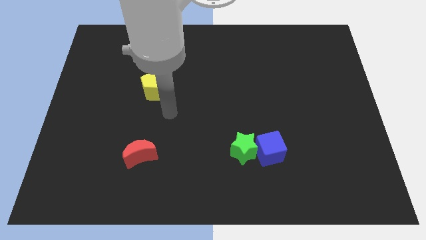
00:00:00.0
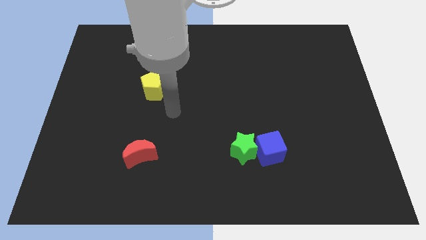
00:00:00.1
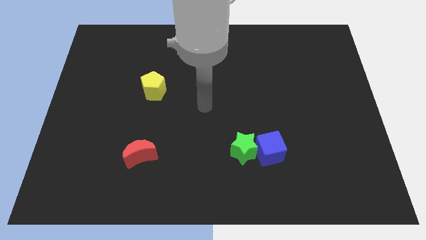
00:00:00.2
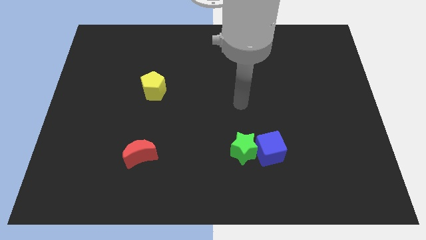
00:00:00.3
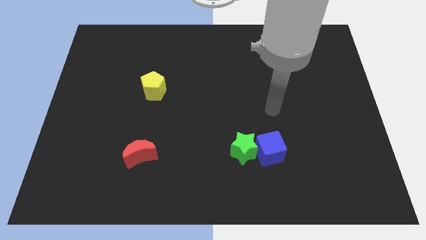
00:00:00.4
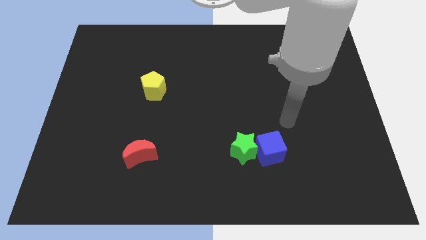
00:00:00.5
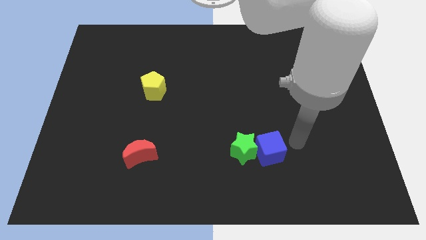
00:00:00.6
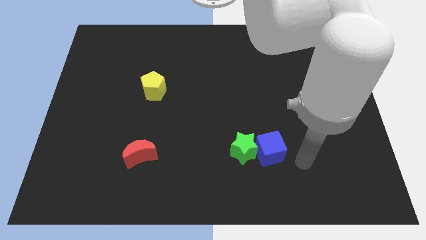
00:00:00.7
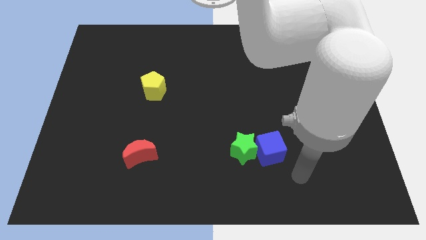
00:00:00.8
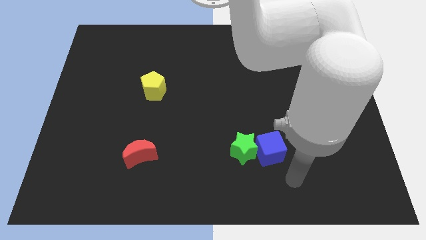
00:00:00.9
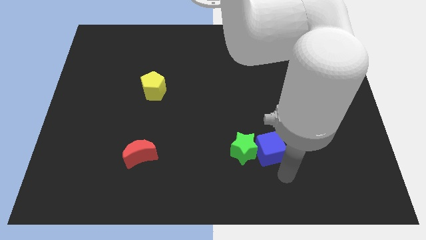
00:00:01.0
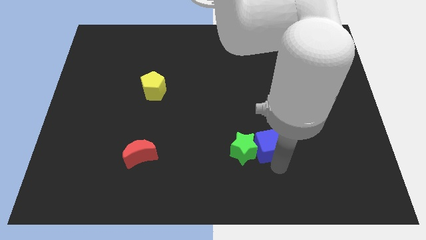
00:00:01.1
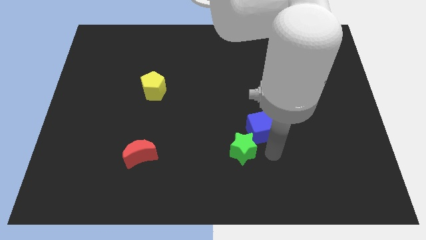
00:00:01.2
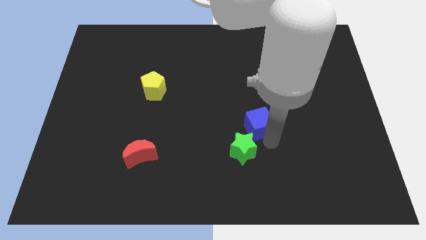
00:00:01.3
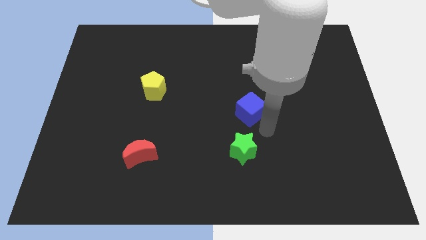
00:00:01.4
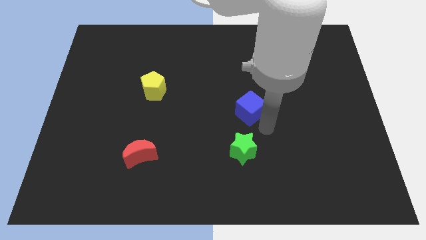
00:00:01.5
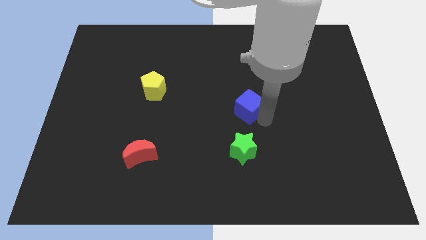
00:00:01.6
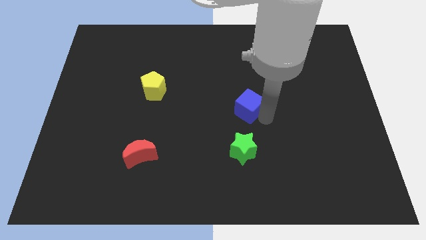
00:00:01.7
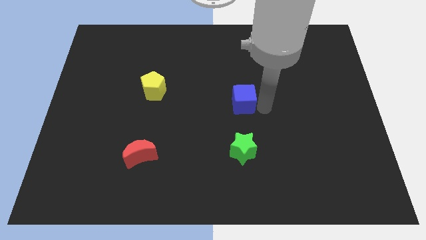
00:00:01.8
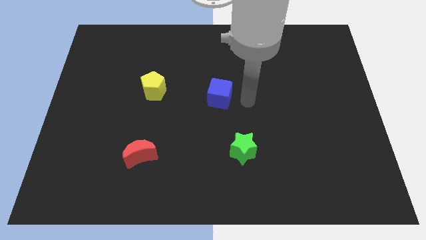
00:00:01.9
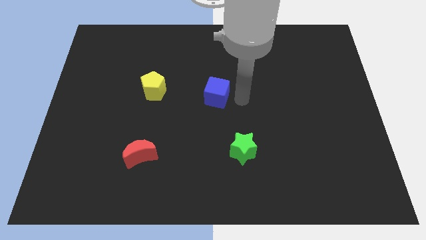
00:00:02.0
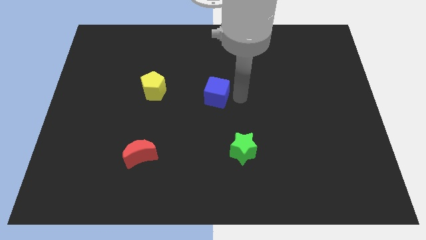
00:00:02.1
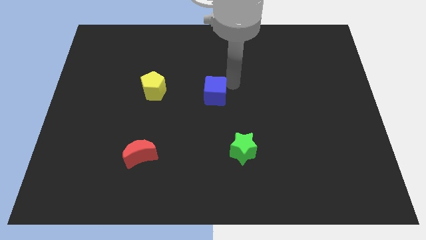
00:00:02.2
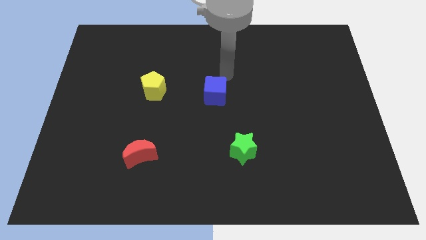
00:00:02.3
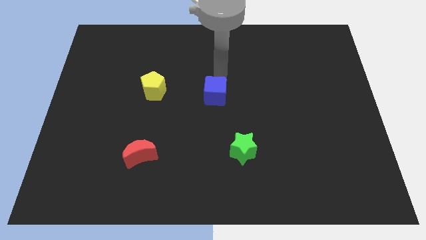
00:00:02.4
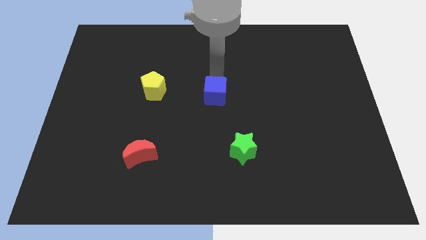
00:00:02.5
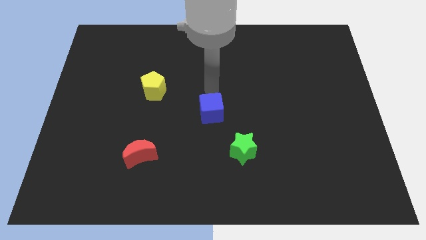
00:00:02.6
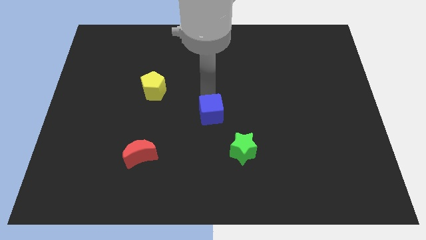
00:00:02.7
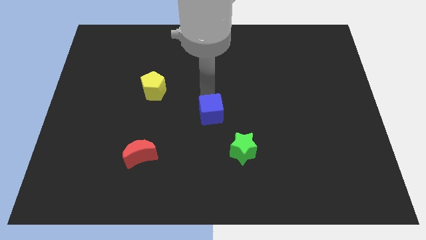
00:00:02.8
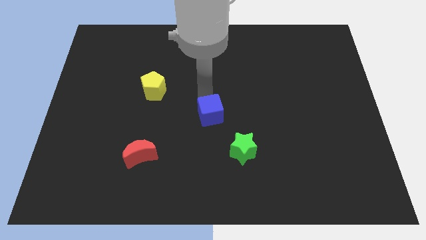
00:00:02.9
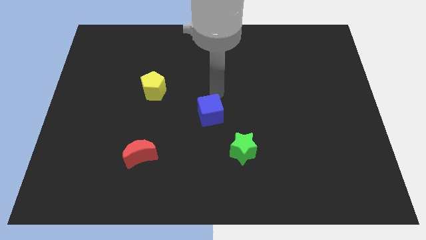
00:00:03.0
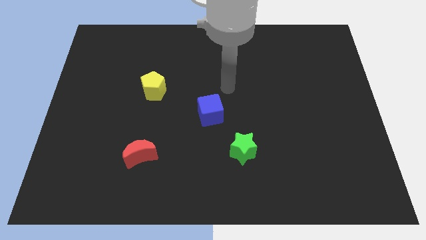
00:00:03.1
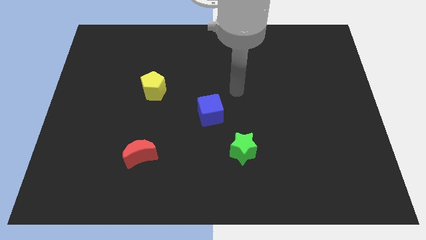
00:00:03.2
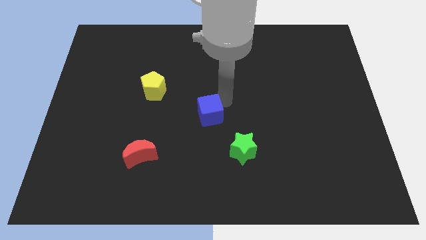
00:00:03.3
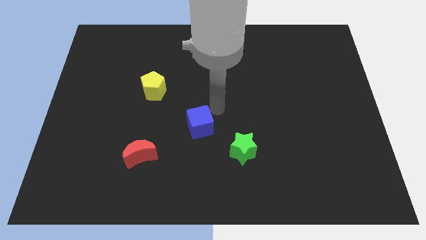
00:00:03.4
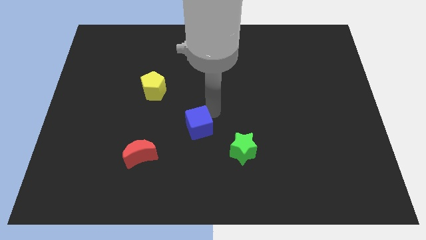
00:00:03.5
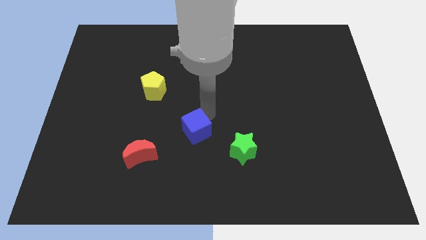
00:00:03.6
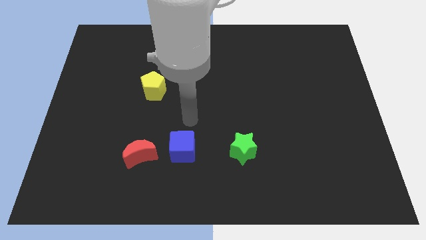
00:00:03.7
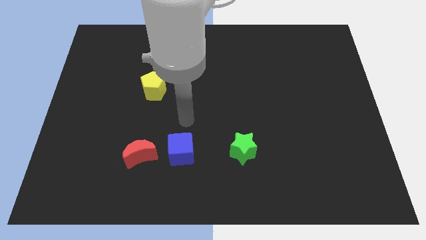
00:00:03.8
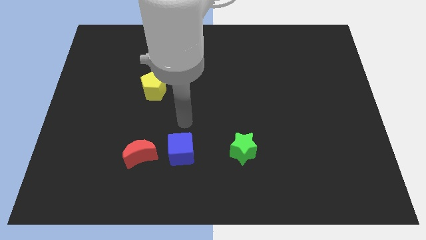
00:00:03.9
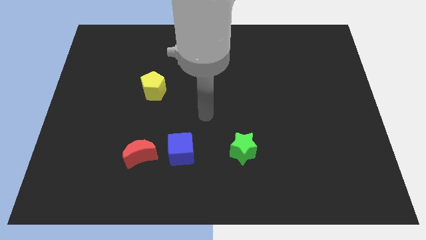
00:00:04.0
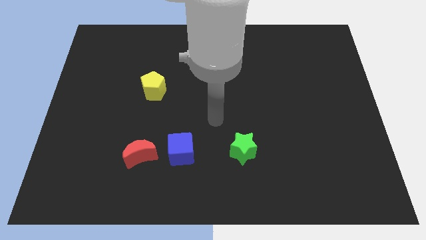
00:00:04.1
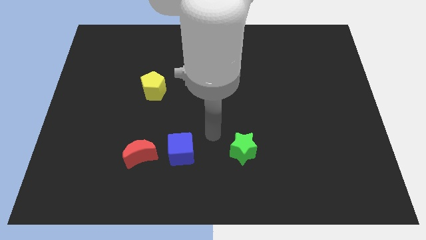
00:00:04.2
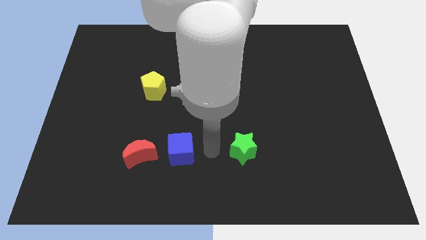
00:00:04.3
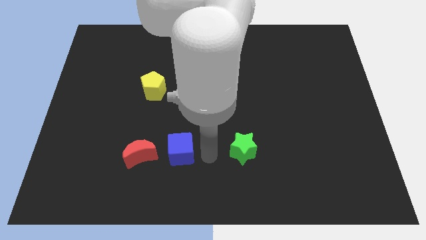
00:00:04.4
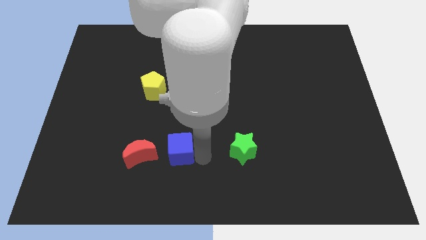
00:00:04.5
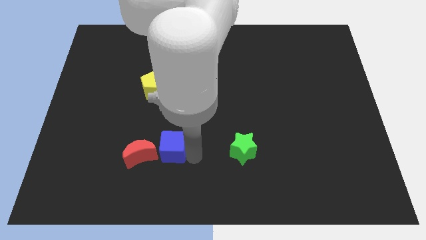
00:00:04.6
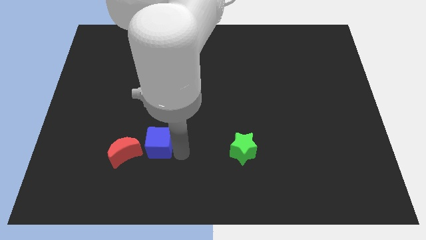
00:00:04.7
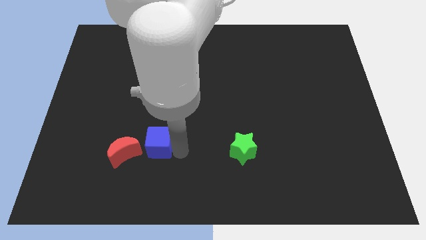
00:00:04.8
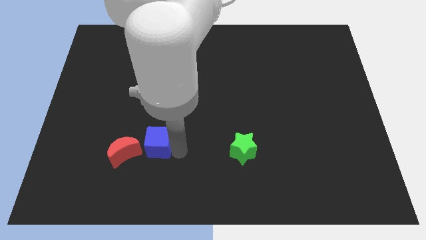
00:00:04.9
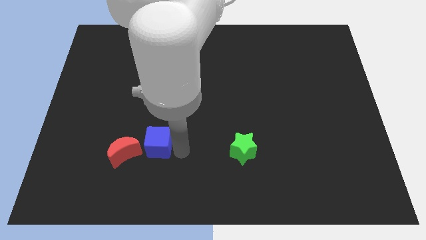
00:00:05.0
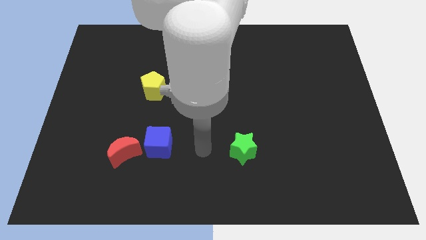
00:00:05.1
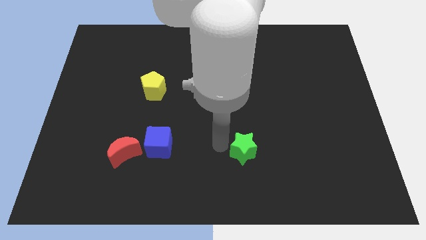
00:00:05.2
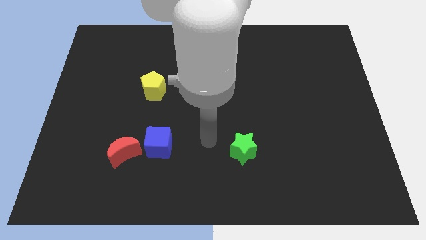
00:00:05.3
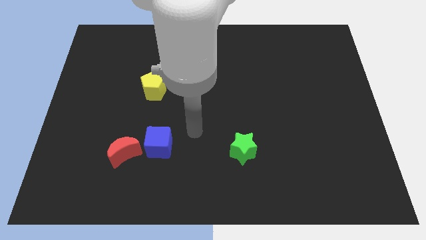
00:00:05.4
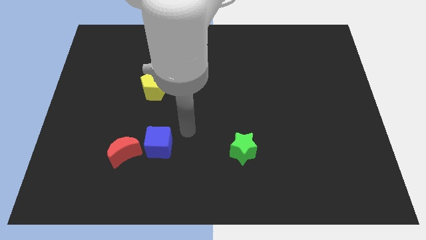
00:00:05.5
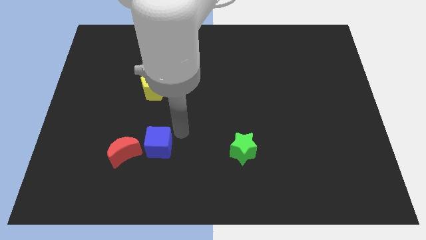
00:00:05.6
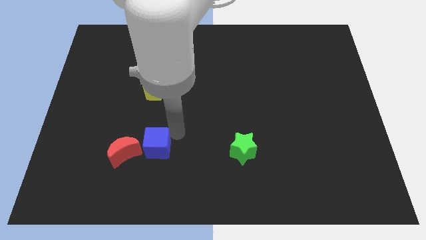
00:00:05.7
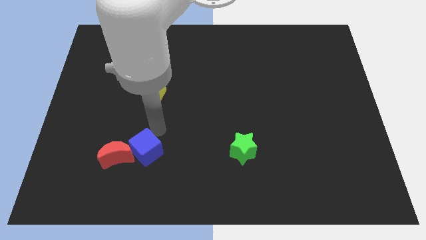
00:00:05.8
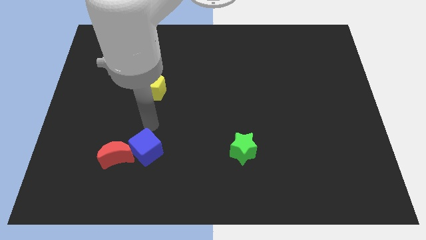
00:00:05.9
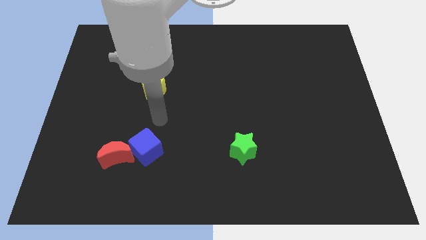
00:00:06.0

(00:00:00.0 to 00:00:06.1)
slide the cube close to the moon

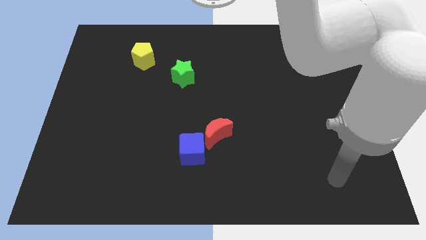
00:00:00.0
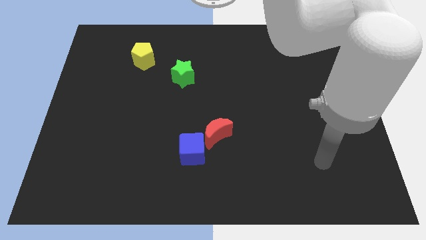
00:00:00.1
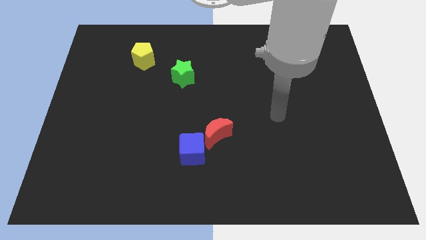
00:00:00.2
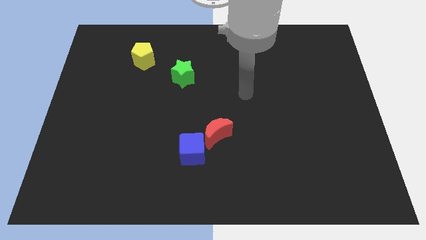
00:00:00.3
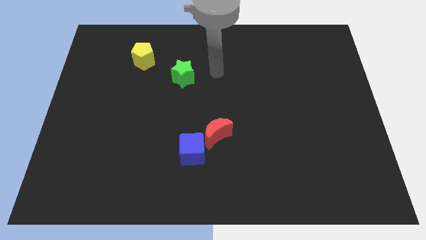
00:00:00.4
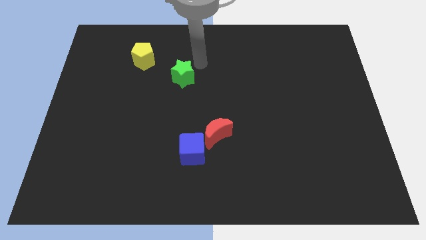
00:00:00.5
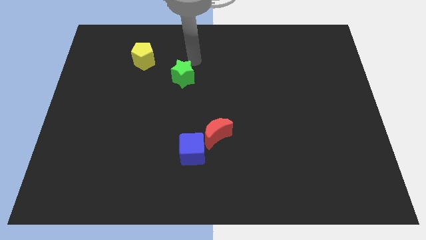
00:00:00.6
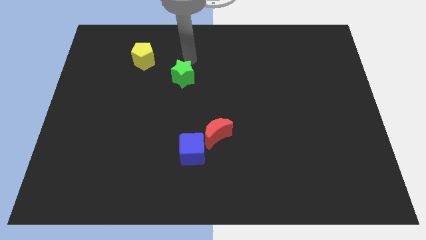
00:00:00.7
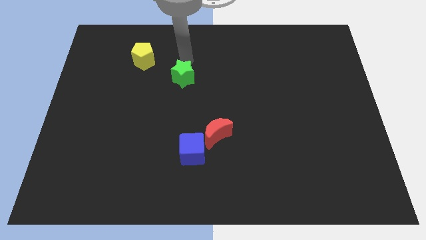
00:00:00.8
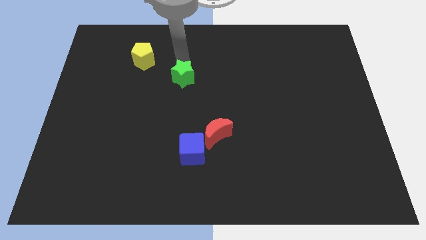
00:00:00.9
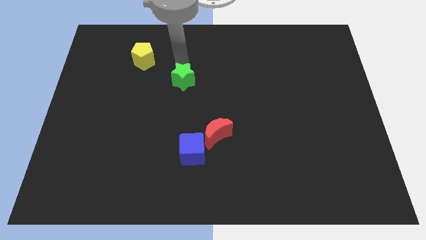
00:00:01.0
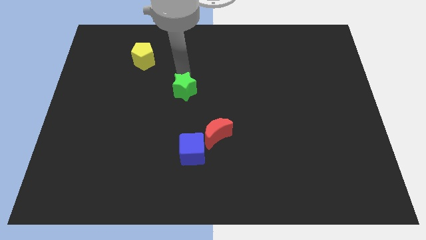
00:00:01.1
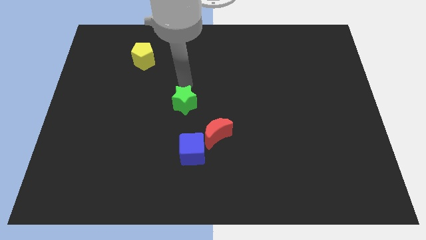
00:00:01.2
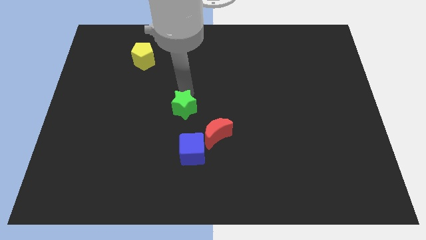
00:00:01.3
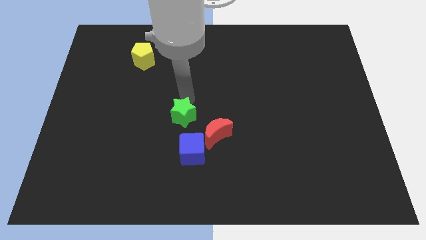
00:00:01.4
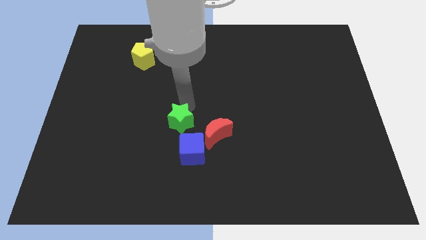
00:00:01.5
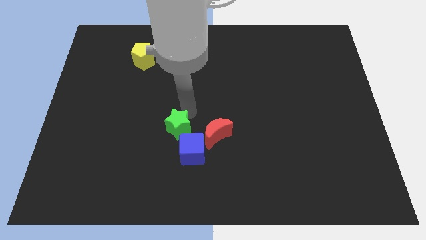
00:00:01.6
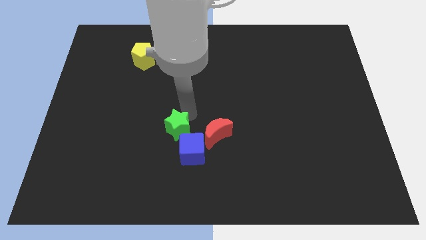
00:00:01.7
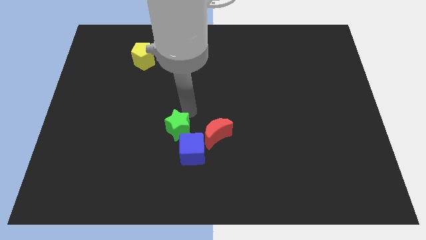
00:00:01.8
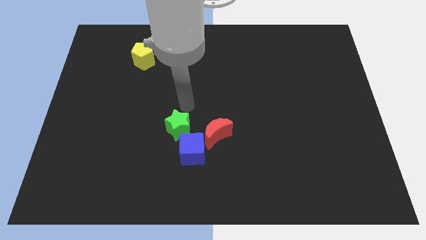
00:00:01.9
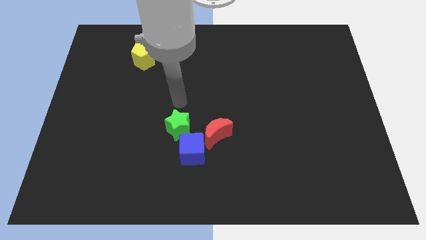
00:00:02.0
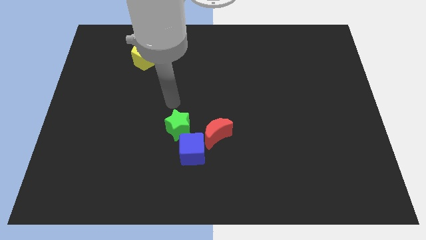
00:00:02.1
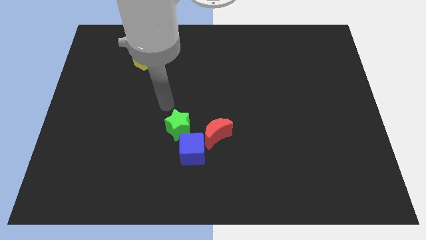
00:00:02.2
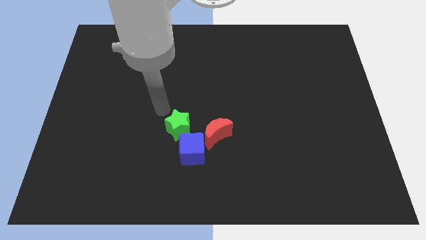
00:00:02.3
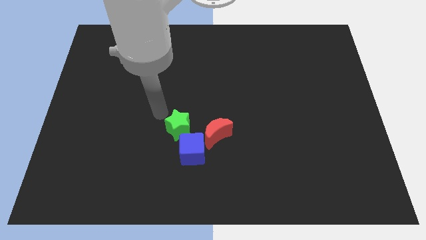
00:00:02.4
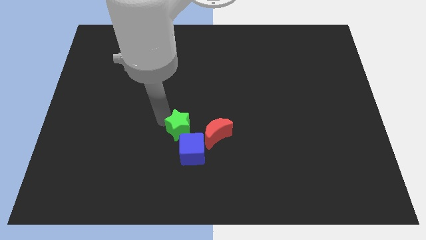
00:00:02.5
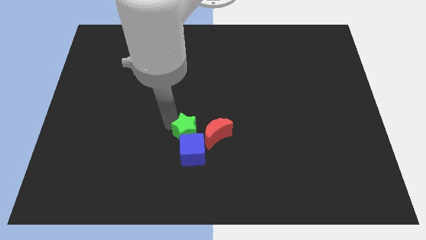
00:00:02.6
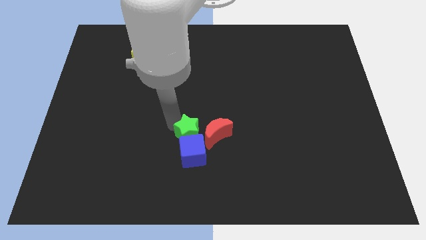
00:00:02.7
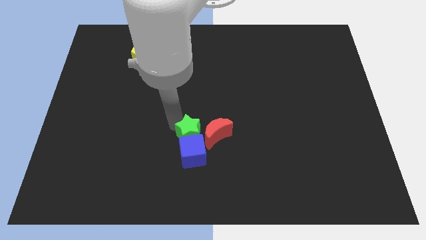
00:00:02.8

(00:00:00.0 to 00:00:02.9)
push the star close to the blue block
